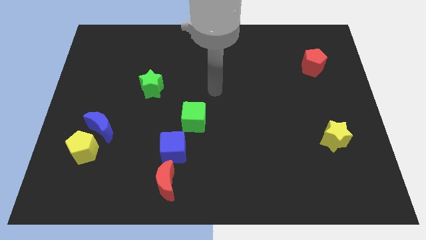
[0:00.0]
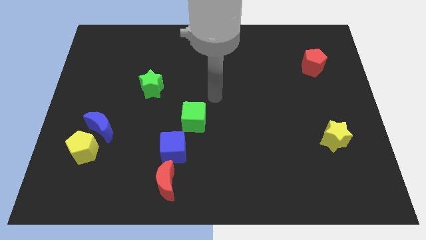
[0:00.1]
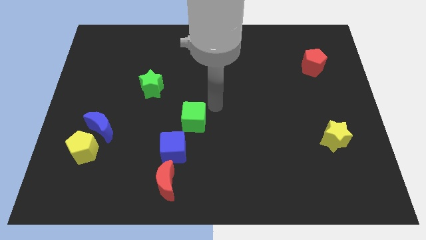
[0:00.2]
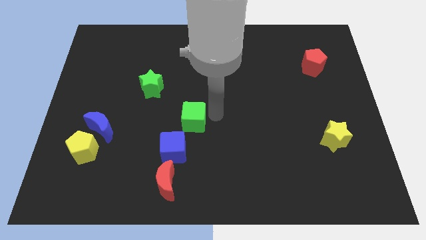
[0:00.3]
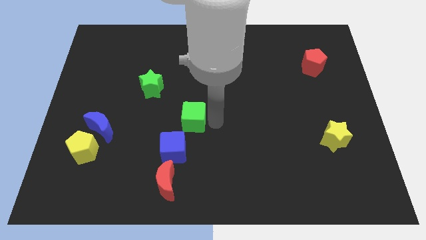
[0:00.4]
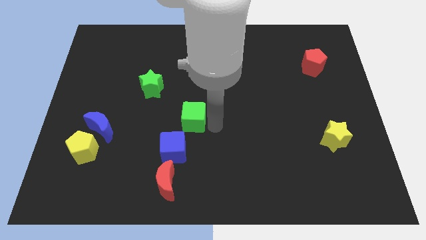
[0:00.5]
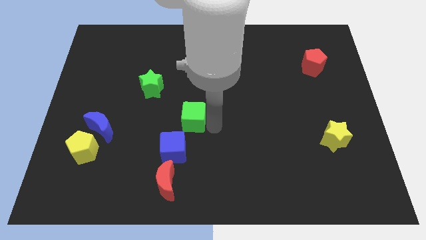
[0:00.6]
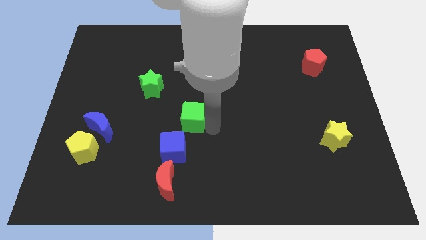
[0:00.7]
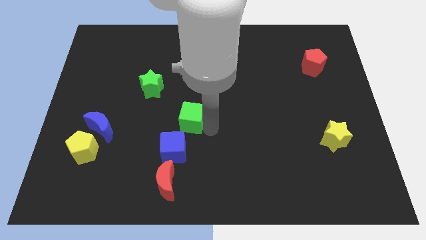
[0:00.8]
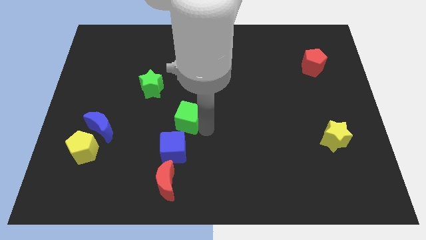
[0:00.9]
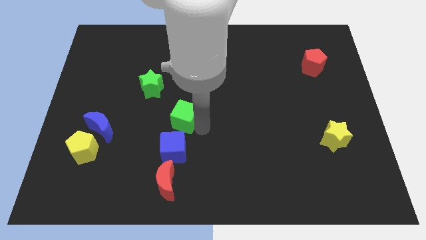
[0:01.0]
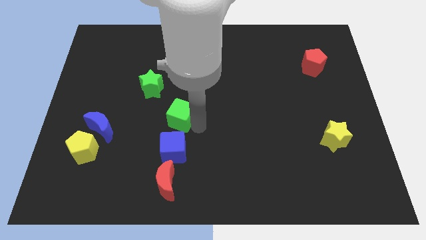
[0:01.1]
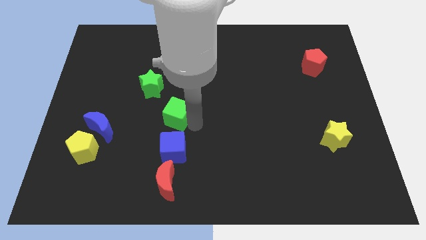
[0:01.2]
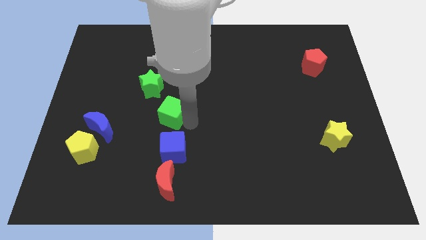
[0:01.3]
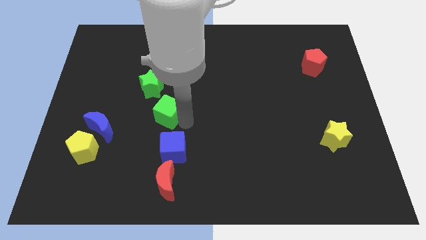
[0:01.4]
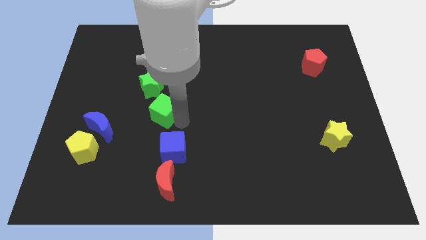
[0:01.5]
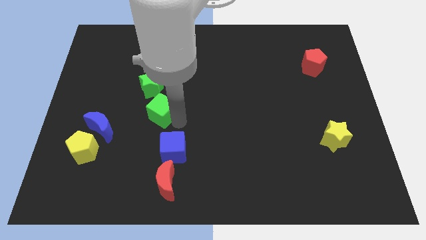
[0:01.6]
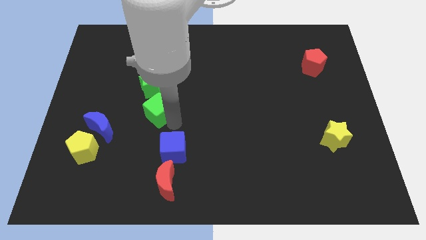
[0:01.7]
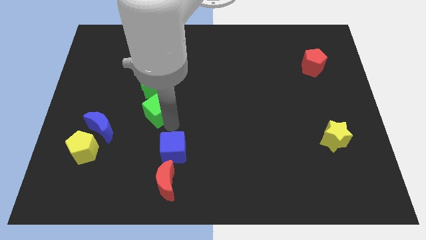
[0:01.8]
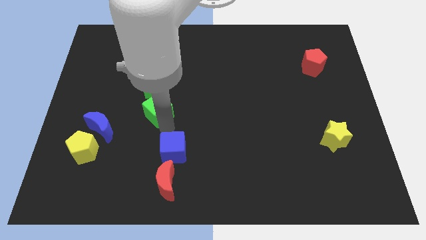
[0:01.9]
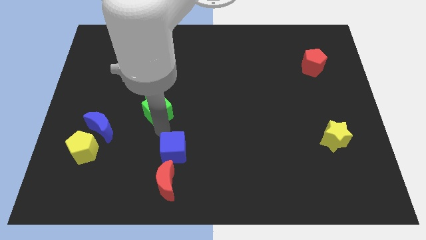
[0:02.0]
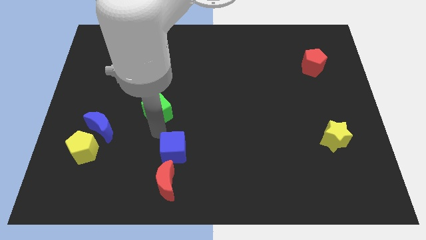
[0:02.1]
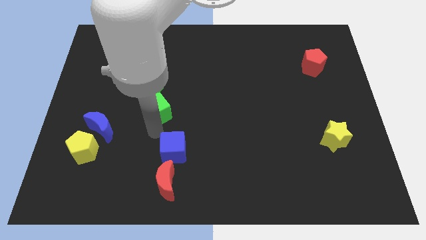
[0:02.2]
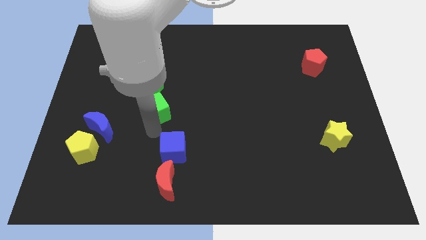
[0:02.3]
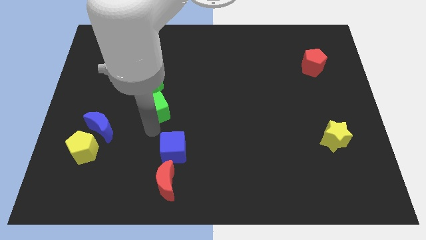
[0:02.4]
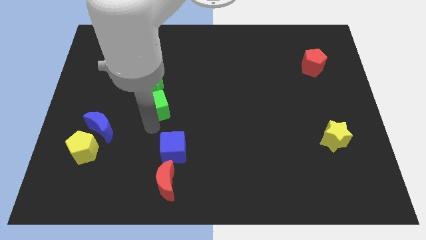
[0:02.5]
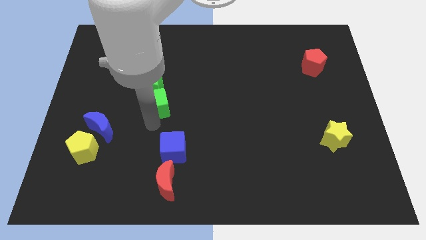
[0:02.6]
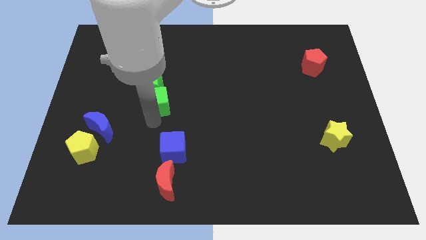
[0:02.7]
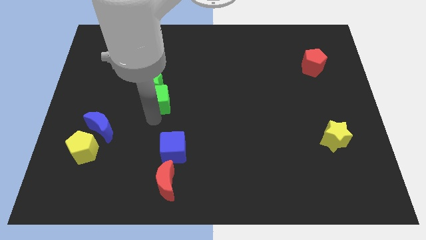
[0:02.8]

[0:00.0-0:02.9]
slide the green cube towards the green star

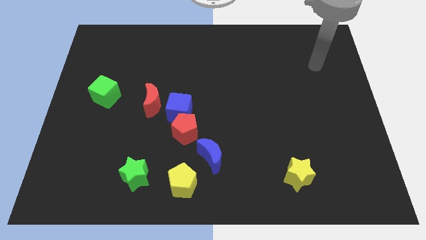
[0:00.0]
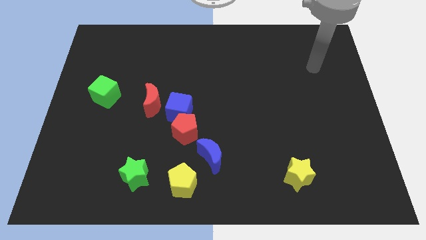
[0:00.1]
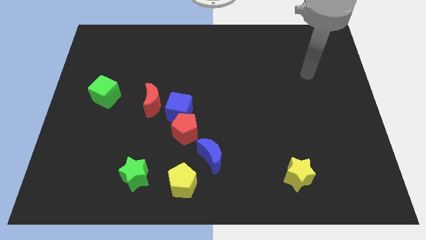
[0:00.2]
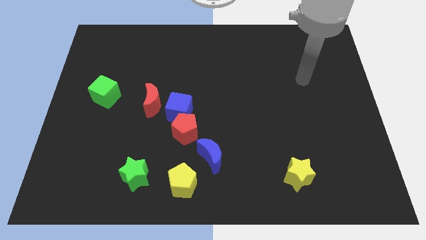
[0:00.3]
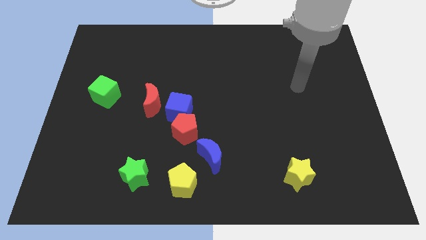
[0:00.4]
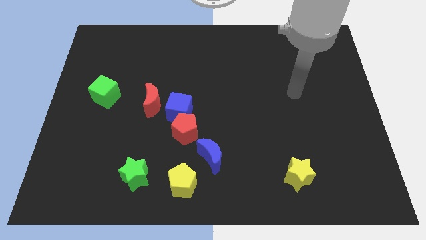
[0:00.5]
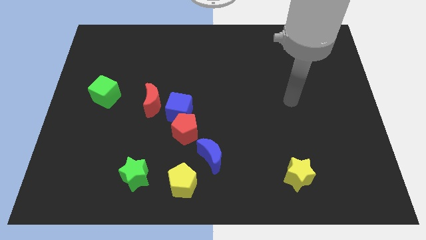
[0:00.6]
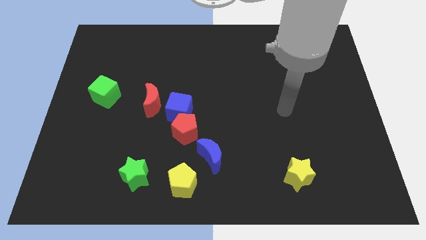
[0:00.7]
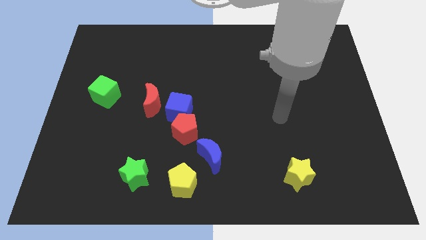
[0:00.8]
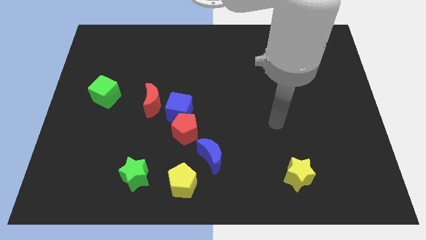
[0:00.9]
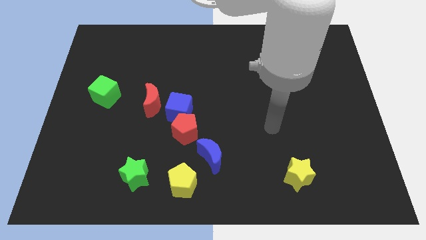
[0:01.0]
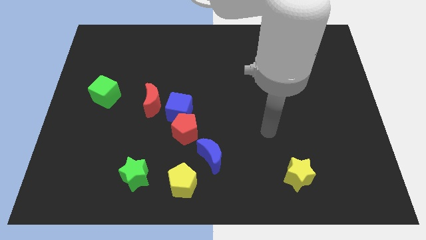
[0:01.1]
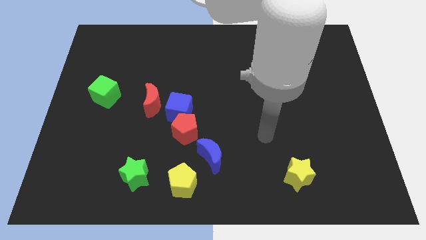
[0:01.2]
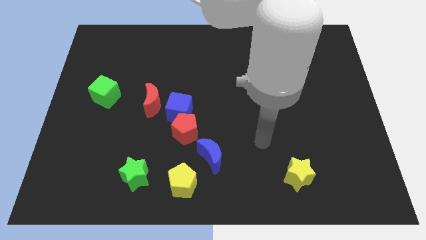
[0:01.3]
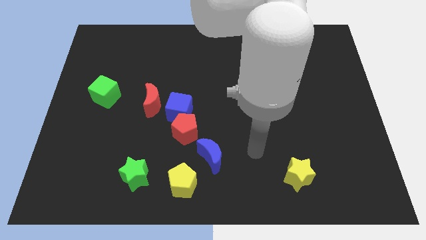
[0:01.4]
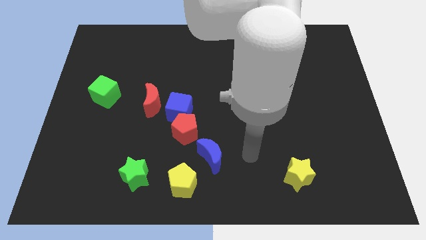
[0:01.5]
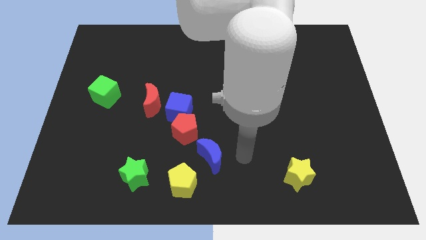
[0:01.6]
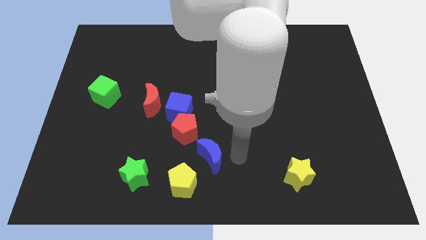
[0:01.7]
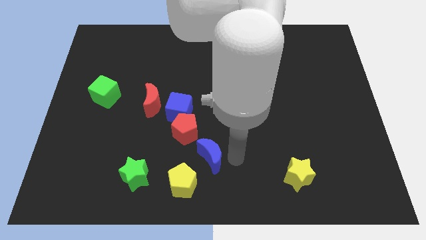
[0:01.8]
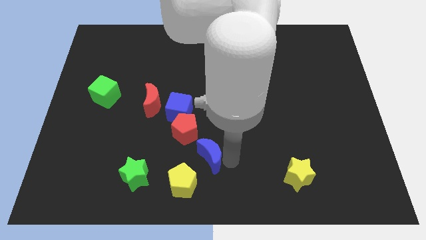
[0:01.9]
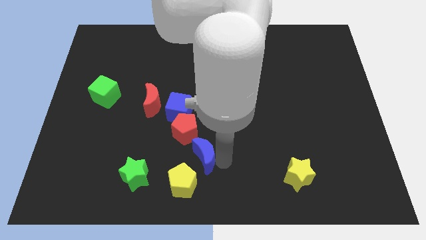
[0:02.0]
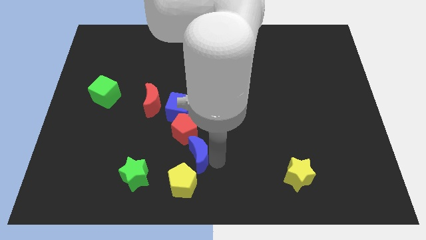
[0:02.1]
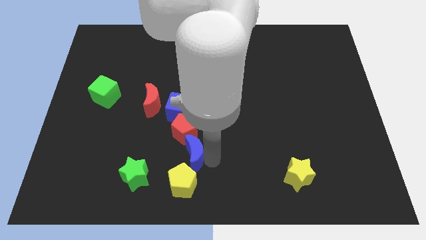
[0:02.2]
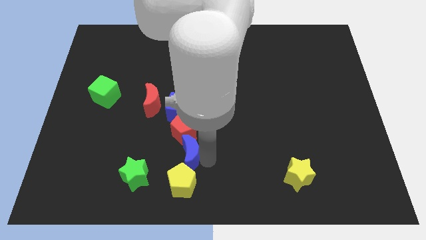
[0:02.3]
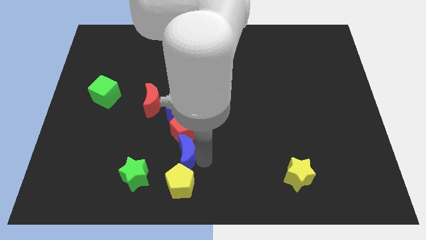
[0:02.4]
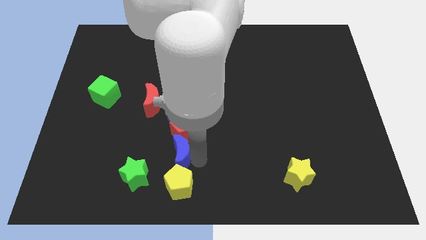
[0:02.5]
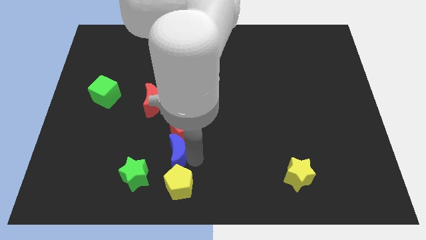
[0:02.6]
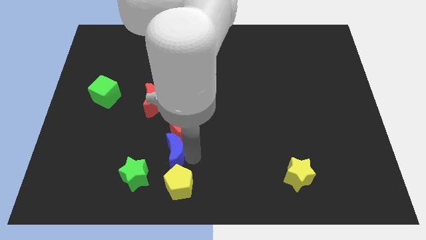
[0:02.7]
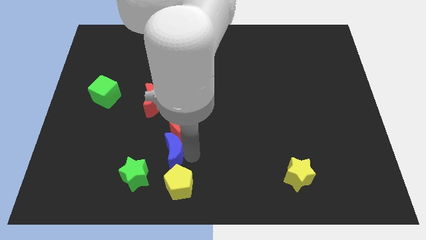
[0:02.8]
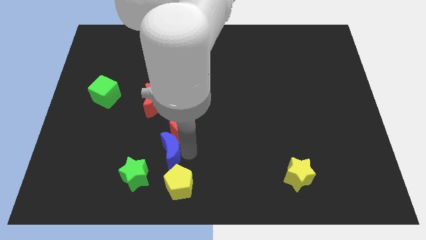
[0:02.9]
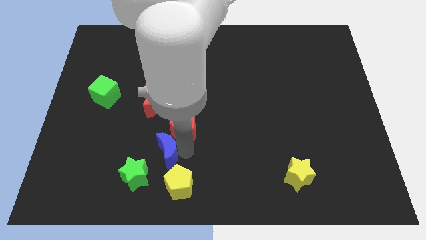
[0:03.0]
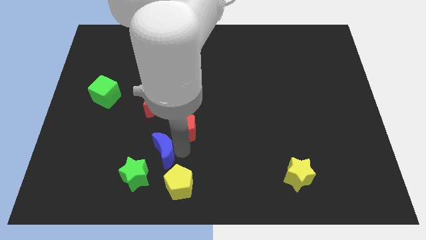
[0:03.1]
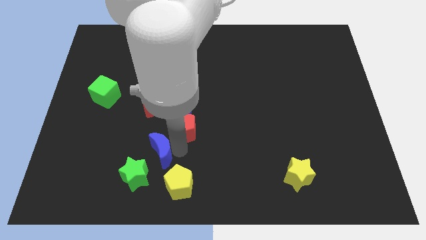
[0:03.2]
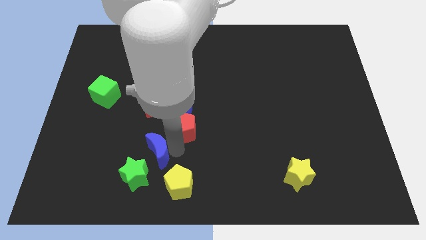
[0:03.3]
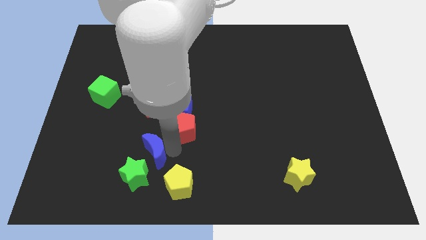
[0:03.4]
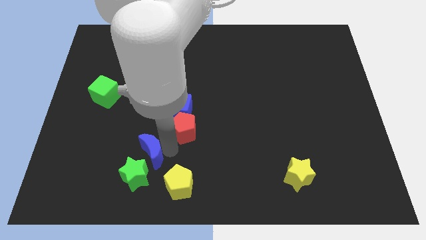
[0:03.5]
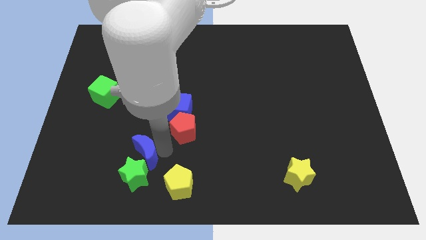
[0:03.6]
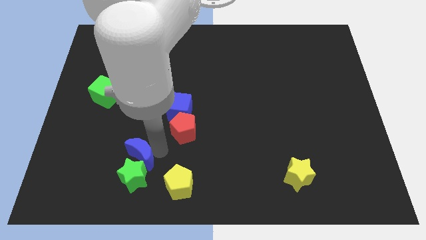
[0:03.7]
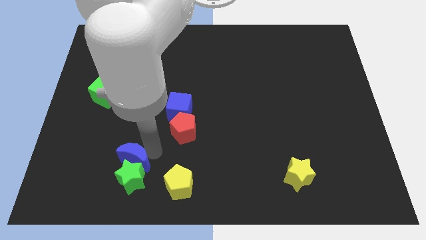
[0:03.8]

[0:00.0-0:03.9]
move the blue moon close to the green star

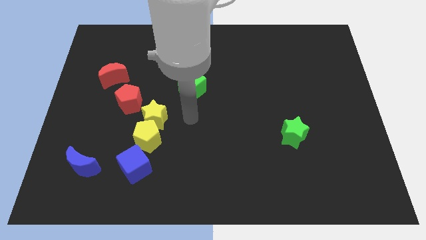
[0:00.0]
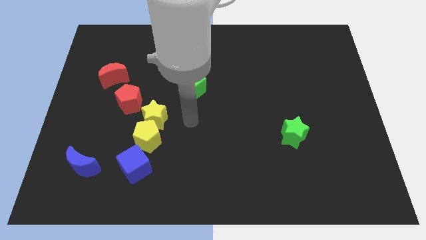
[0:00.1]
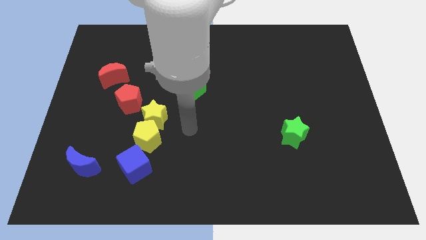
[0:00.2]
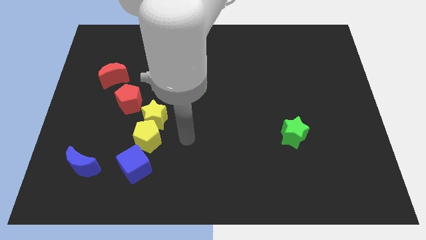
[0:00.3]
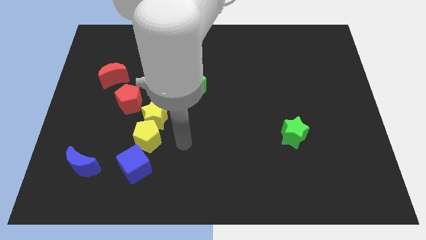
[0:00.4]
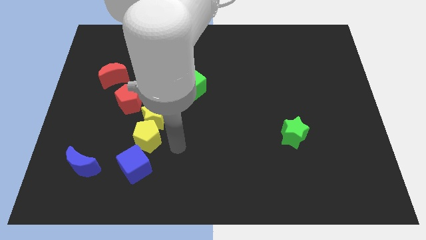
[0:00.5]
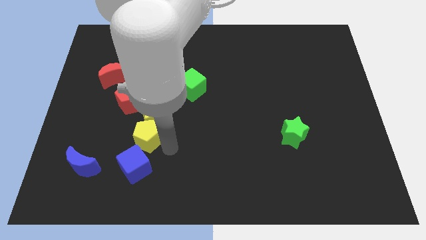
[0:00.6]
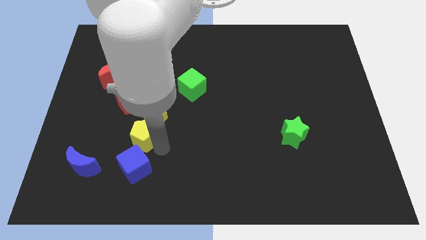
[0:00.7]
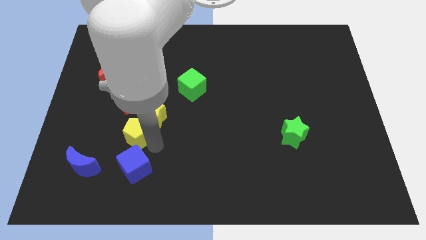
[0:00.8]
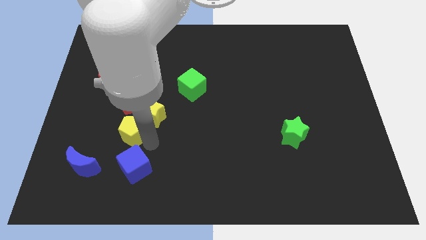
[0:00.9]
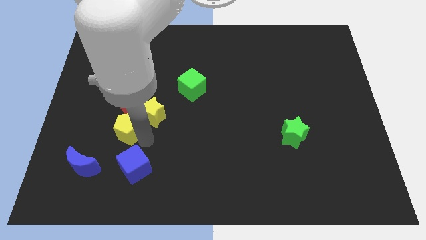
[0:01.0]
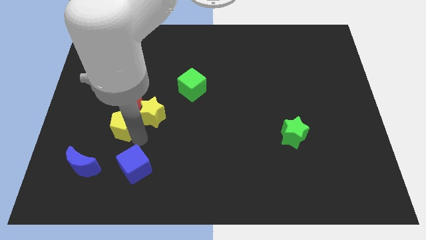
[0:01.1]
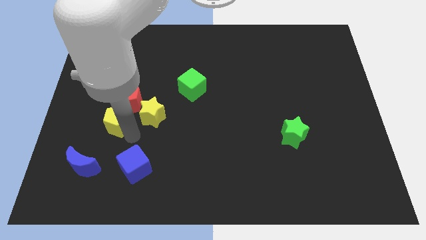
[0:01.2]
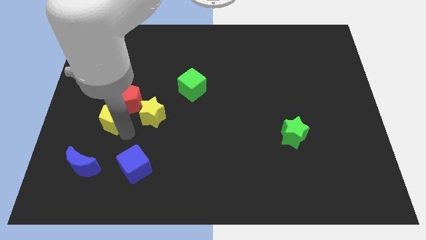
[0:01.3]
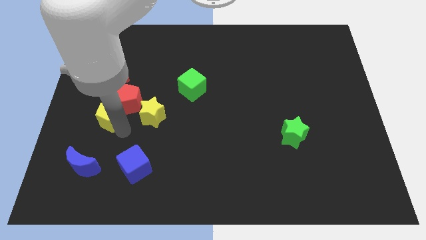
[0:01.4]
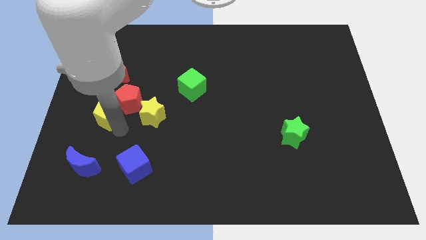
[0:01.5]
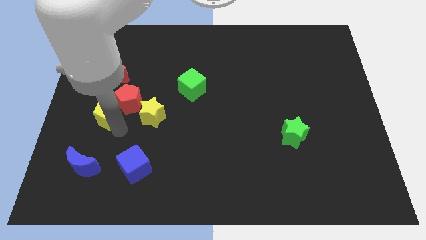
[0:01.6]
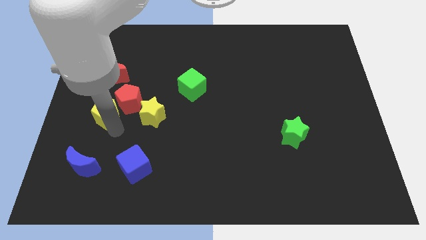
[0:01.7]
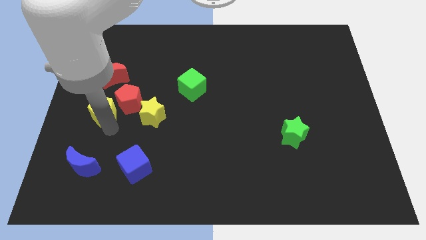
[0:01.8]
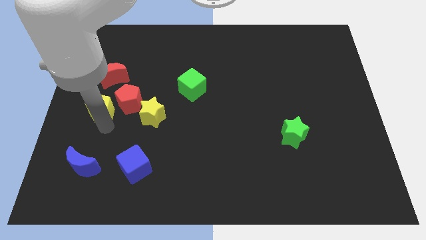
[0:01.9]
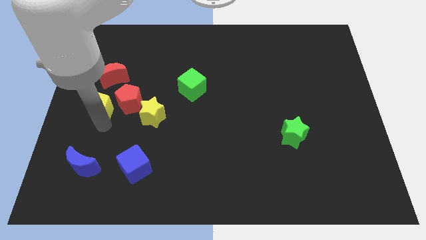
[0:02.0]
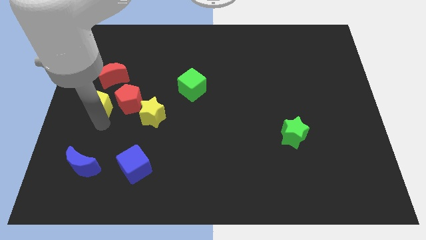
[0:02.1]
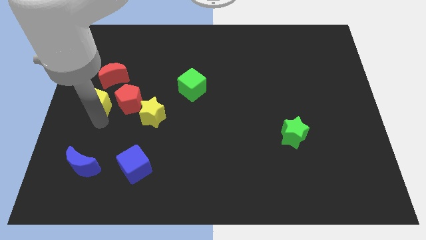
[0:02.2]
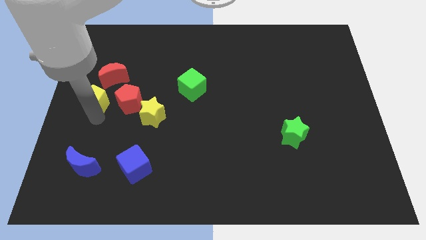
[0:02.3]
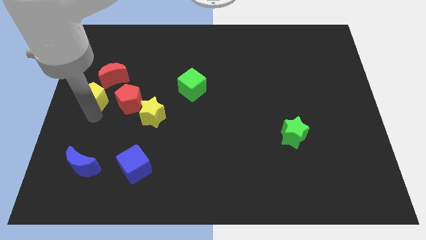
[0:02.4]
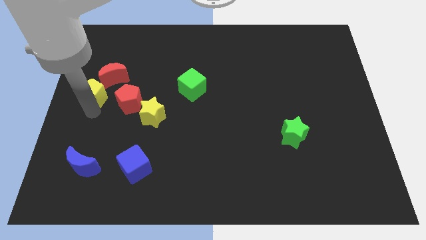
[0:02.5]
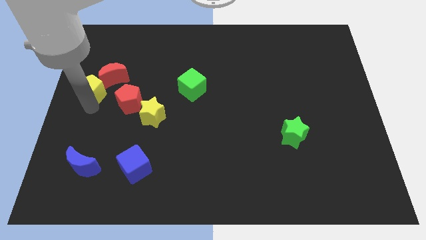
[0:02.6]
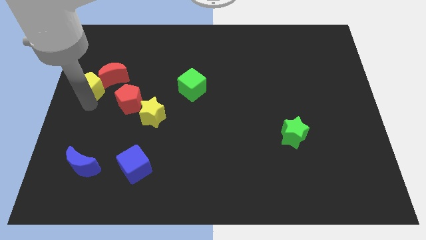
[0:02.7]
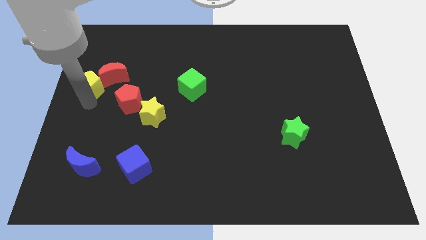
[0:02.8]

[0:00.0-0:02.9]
put the yellow pentagon close to the red moon
